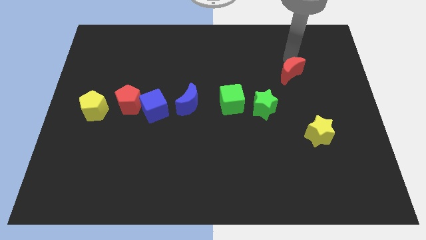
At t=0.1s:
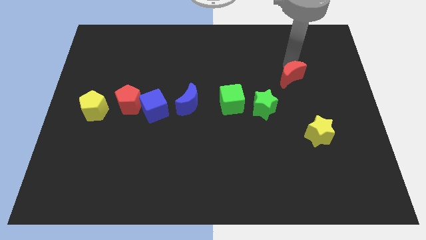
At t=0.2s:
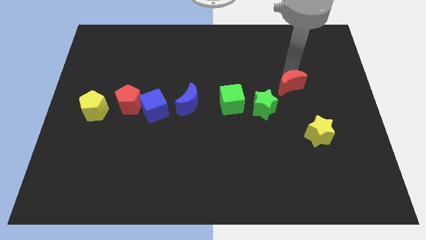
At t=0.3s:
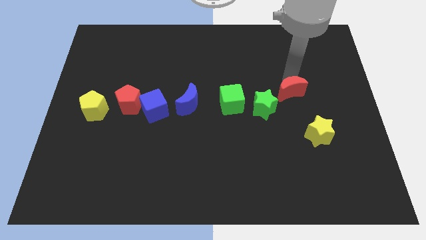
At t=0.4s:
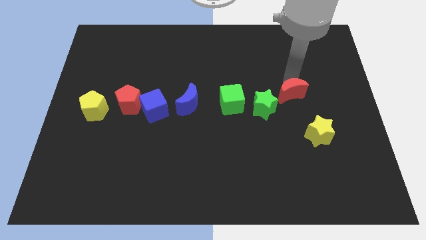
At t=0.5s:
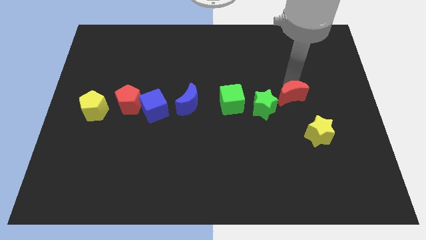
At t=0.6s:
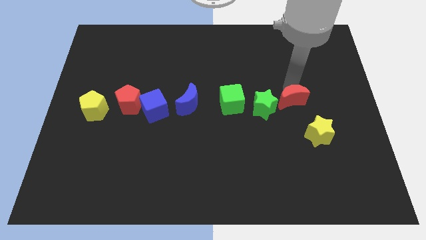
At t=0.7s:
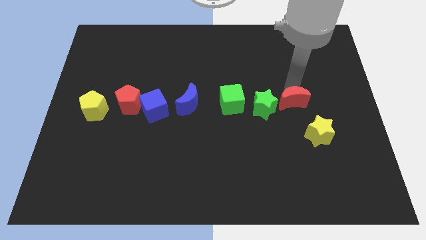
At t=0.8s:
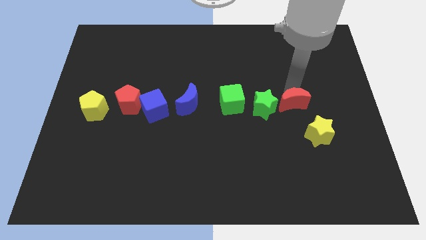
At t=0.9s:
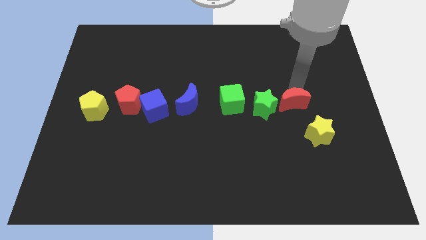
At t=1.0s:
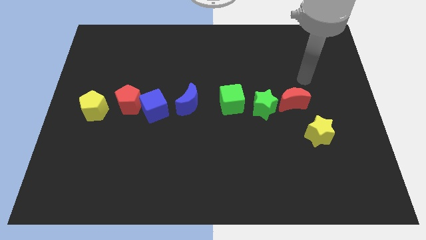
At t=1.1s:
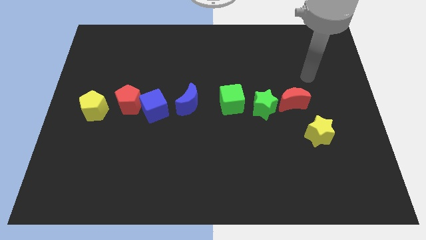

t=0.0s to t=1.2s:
place the red moon diagonal to the yellow star

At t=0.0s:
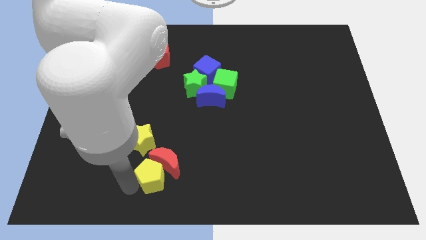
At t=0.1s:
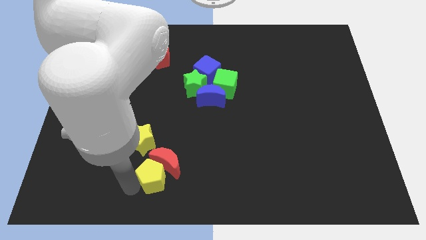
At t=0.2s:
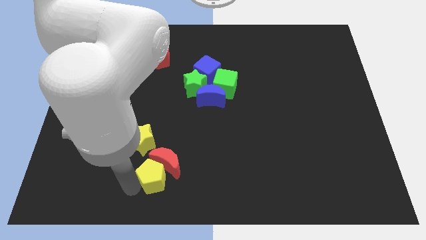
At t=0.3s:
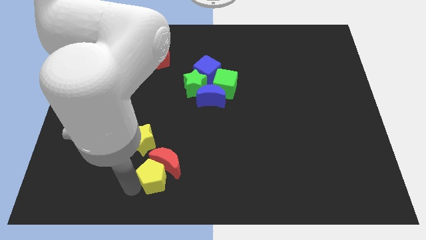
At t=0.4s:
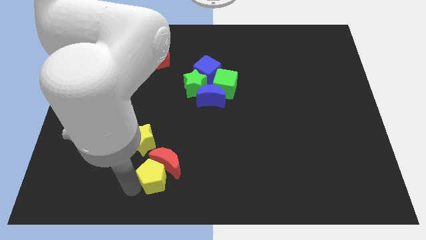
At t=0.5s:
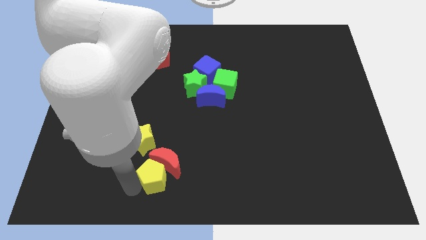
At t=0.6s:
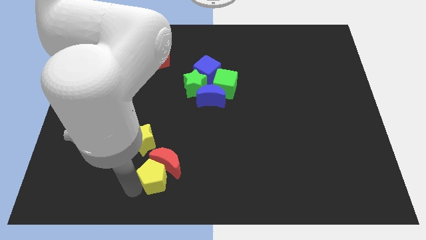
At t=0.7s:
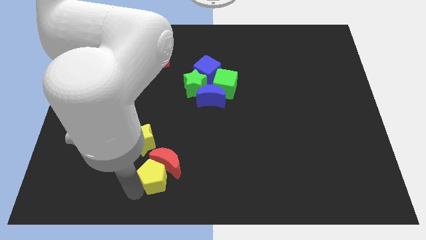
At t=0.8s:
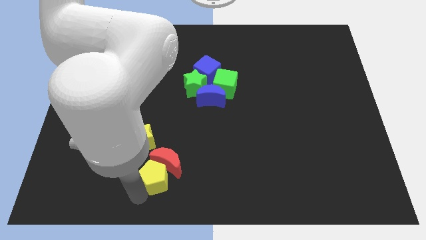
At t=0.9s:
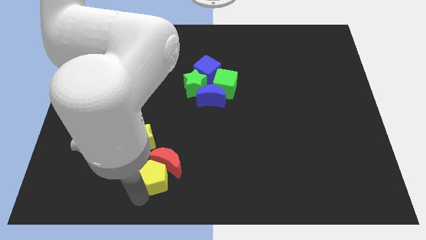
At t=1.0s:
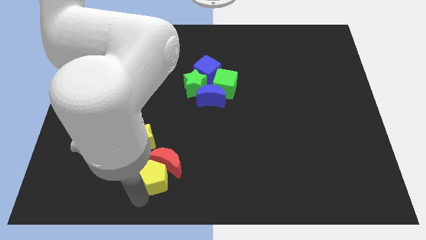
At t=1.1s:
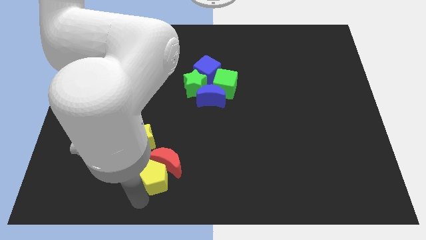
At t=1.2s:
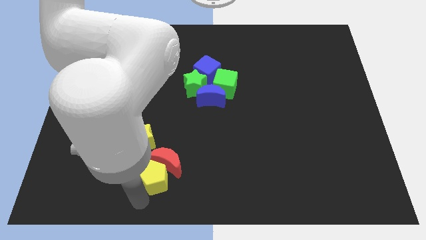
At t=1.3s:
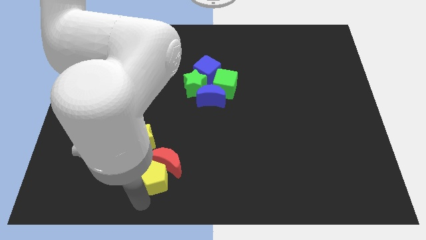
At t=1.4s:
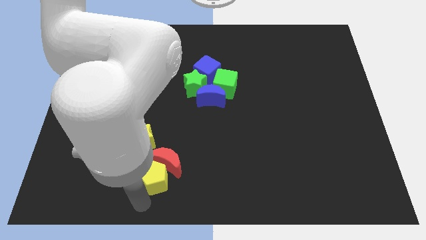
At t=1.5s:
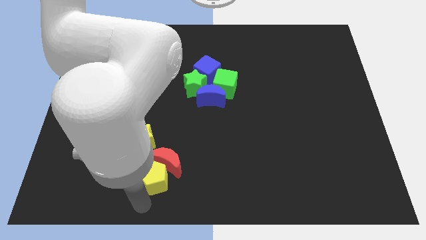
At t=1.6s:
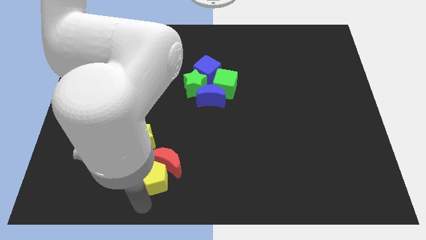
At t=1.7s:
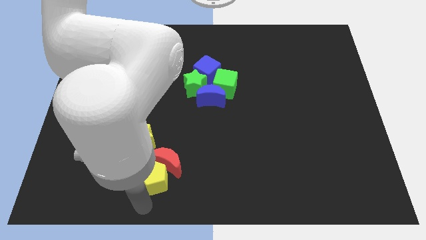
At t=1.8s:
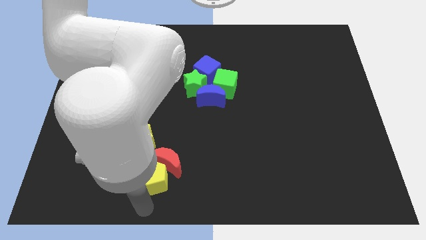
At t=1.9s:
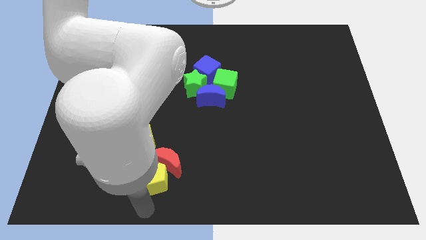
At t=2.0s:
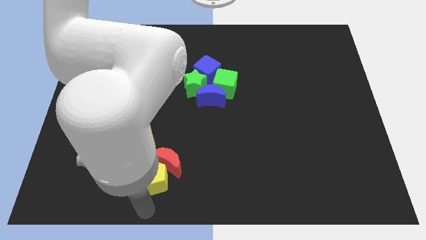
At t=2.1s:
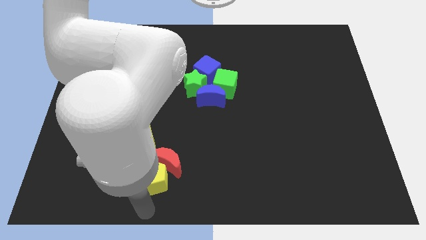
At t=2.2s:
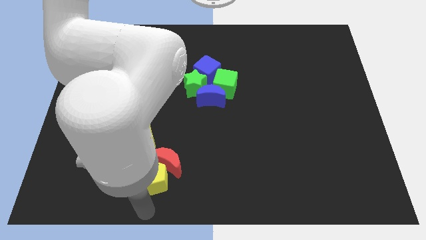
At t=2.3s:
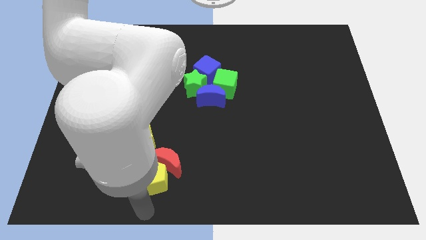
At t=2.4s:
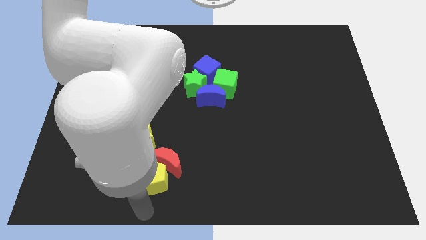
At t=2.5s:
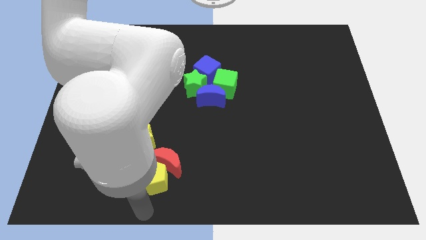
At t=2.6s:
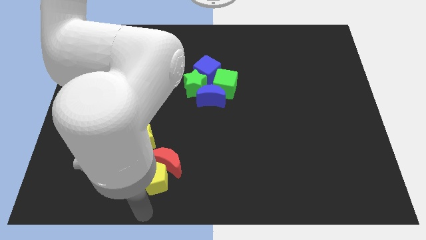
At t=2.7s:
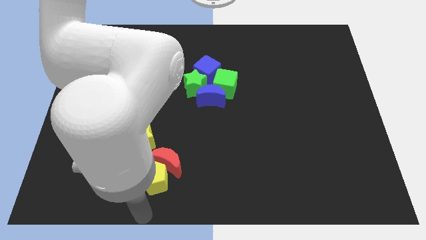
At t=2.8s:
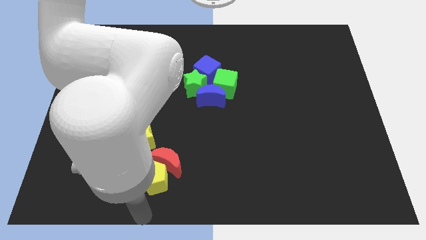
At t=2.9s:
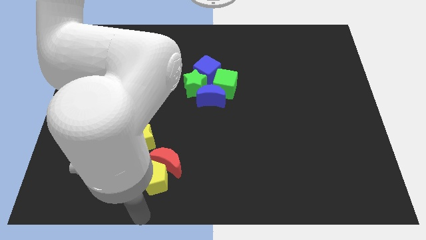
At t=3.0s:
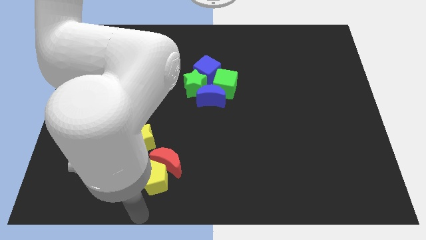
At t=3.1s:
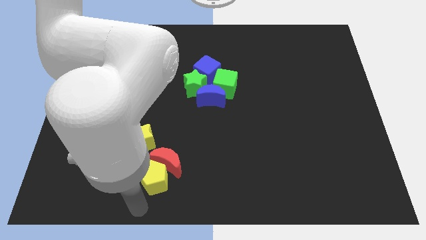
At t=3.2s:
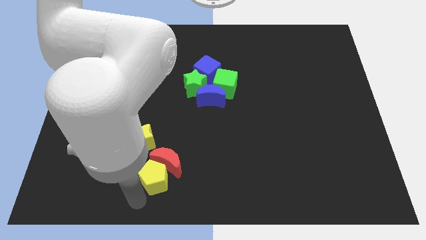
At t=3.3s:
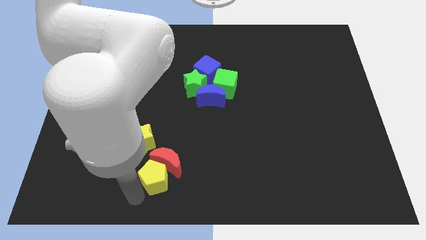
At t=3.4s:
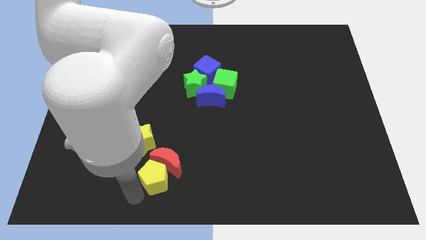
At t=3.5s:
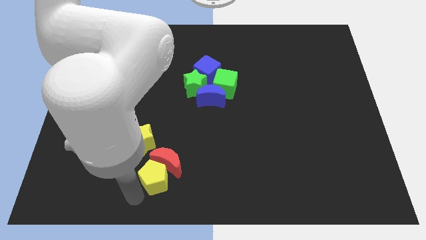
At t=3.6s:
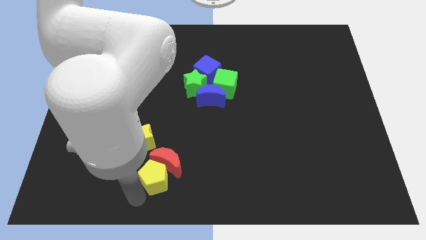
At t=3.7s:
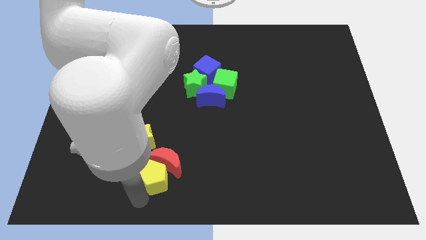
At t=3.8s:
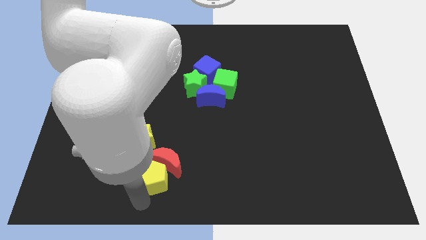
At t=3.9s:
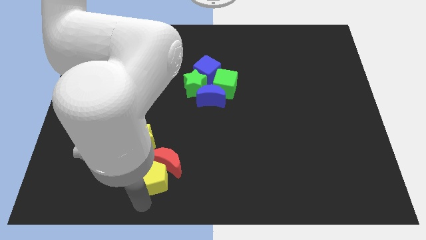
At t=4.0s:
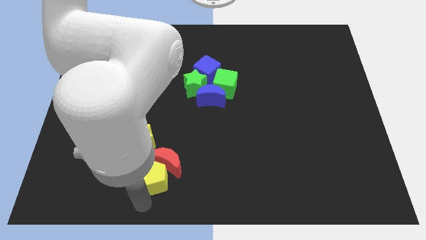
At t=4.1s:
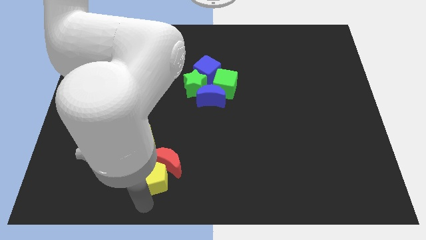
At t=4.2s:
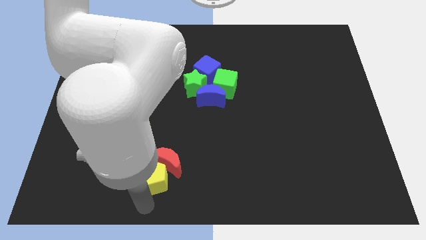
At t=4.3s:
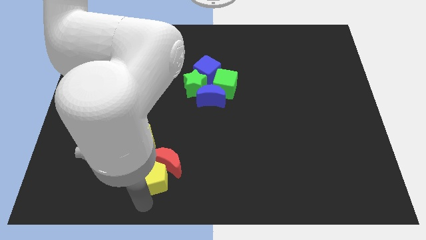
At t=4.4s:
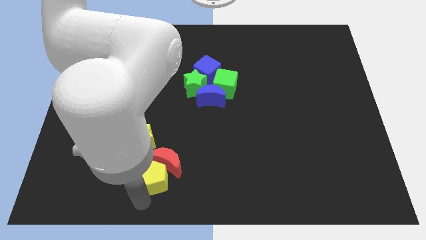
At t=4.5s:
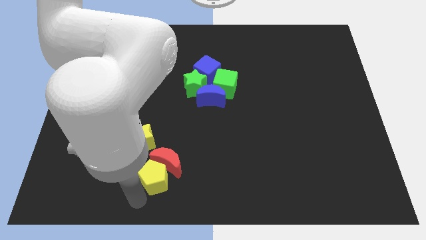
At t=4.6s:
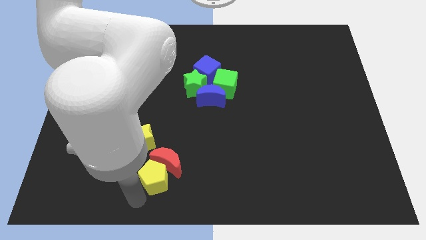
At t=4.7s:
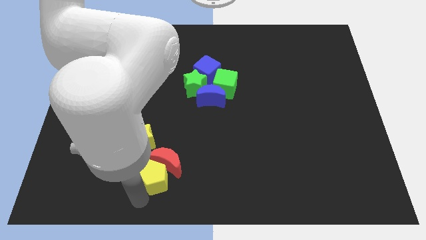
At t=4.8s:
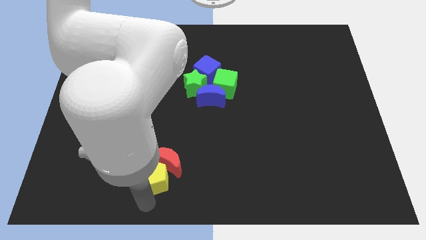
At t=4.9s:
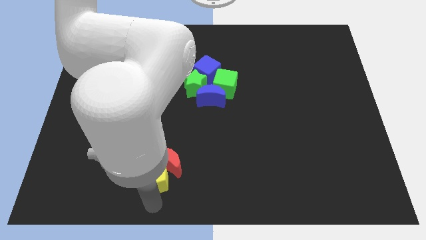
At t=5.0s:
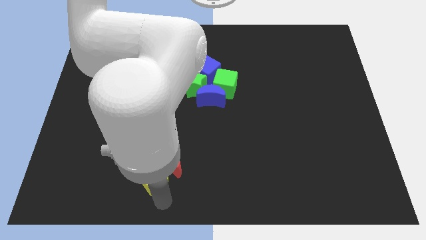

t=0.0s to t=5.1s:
move the arm slightly towards the bottom center of board

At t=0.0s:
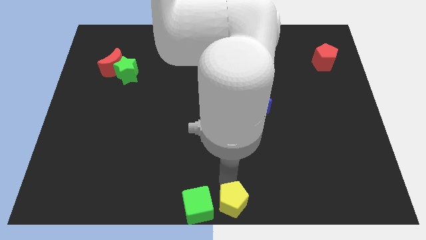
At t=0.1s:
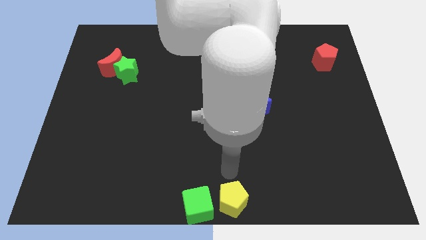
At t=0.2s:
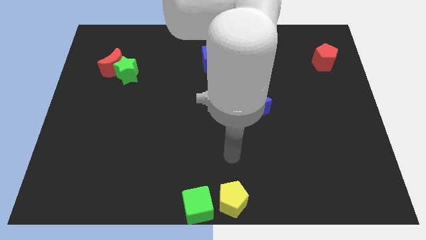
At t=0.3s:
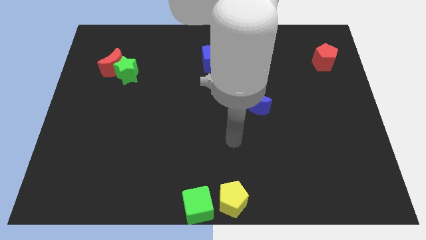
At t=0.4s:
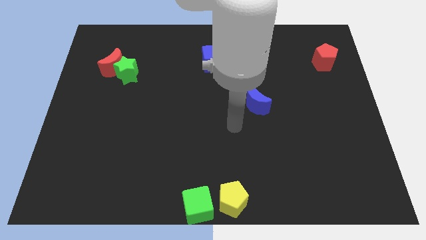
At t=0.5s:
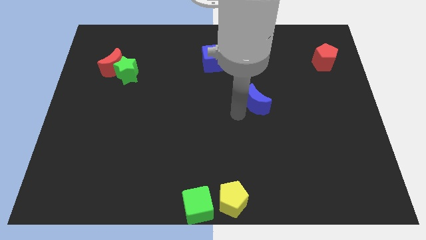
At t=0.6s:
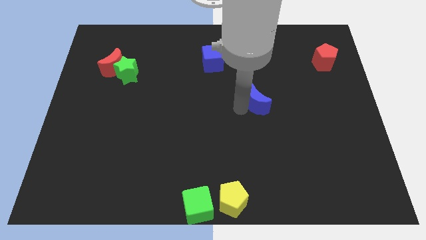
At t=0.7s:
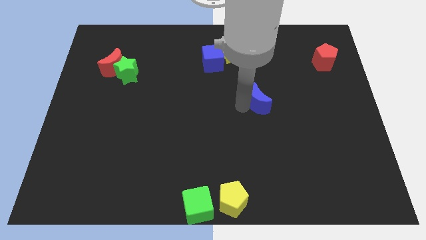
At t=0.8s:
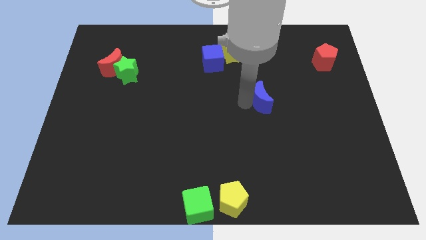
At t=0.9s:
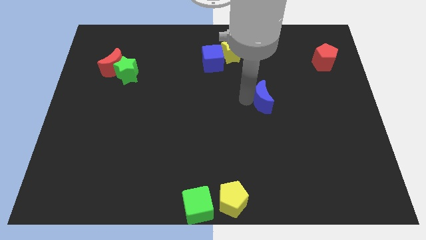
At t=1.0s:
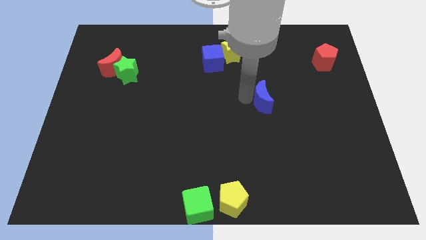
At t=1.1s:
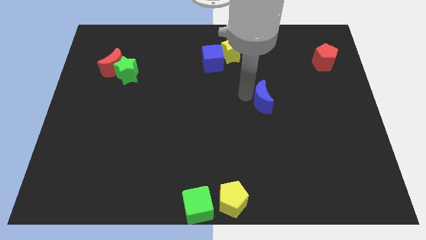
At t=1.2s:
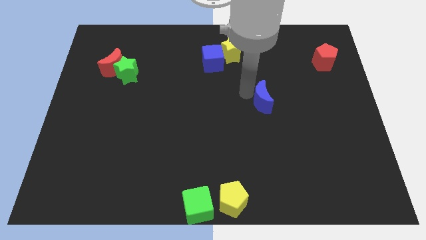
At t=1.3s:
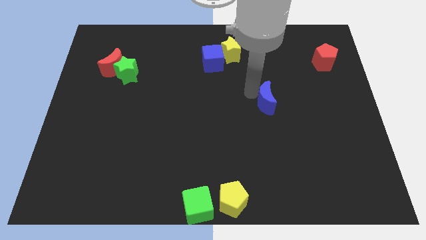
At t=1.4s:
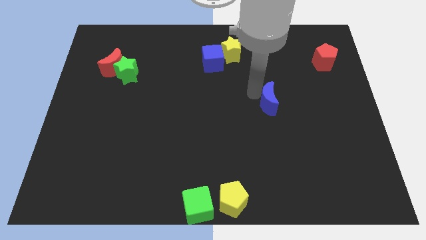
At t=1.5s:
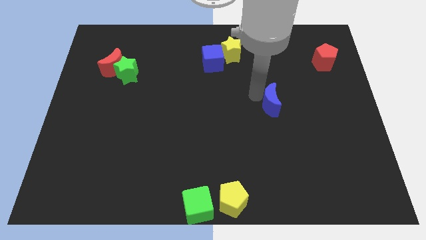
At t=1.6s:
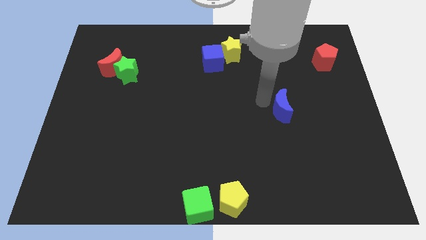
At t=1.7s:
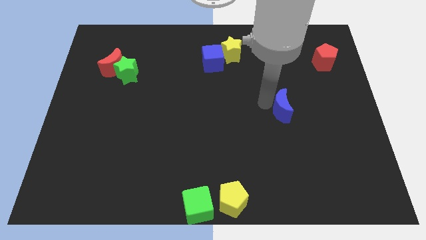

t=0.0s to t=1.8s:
move the blue crescent to the bottom right of the yellow star

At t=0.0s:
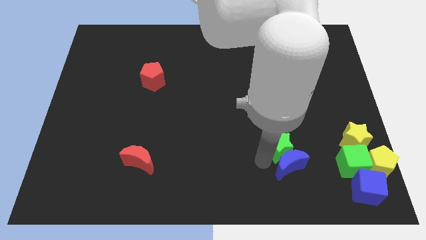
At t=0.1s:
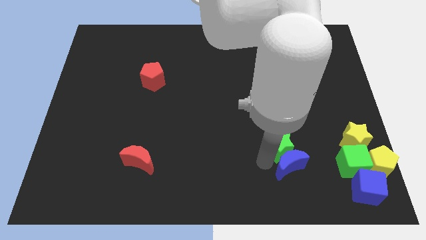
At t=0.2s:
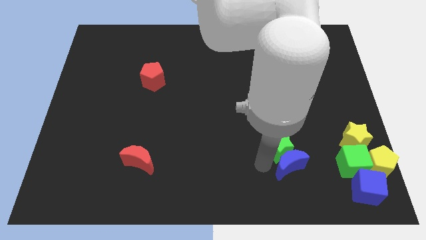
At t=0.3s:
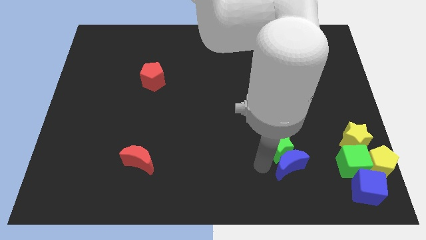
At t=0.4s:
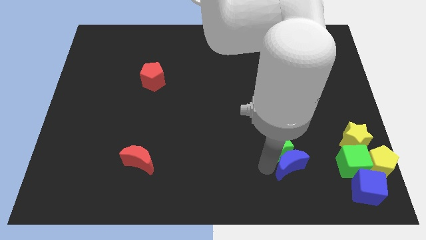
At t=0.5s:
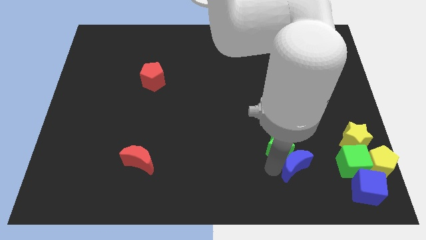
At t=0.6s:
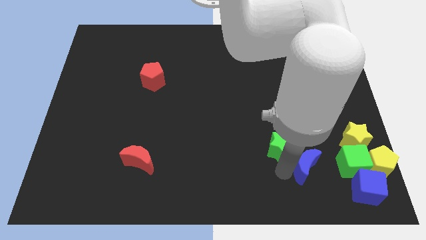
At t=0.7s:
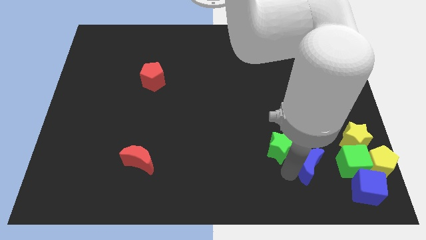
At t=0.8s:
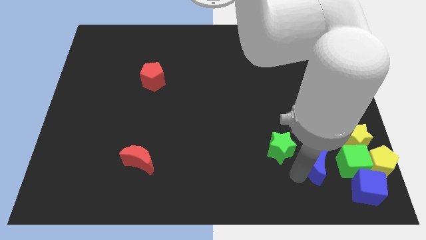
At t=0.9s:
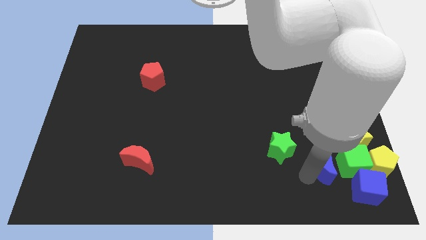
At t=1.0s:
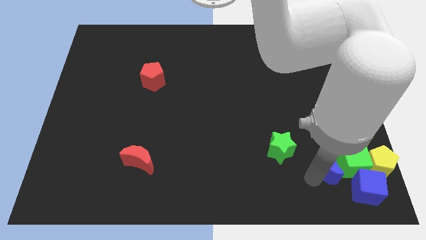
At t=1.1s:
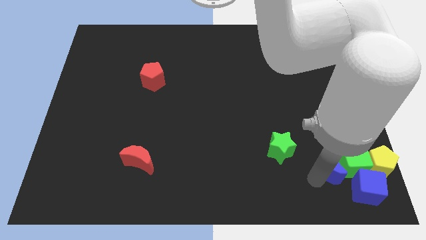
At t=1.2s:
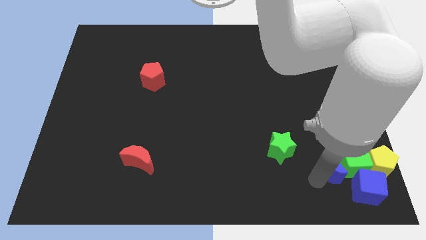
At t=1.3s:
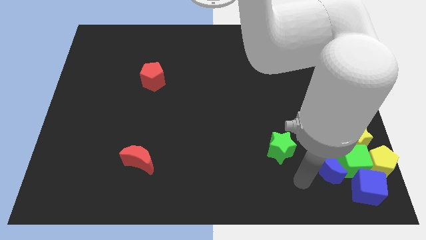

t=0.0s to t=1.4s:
move the blue moon into the group of blocks
